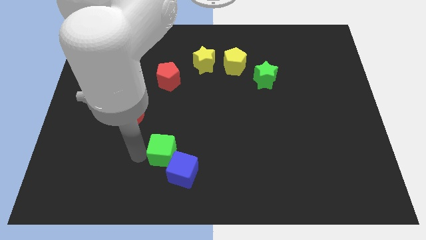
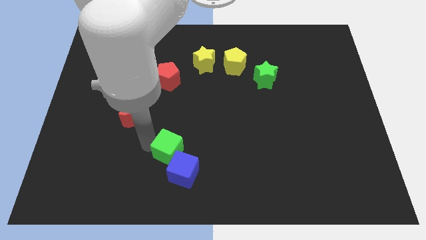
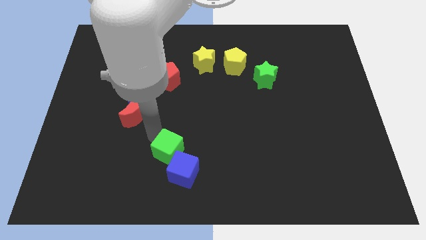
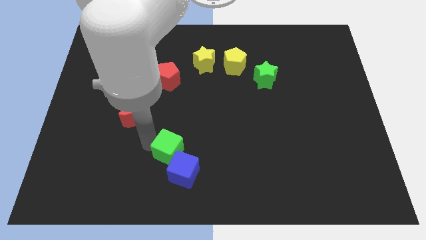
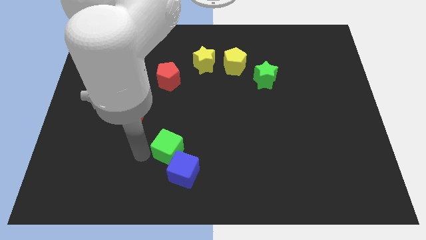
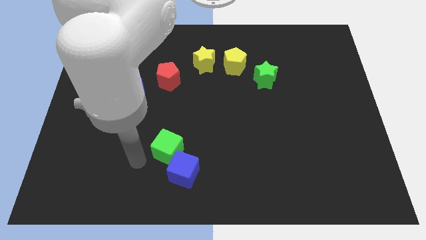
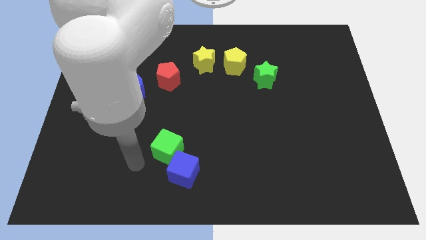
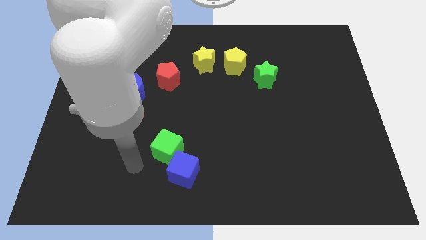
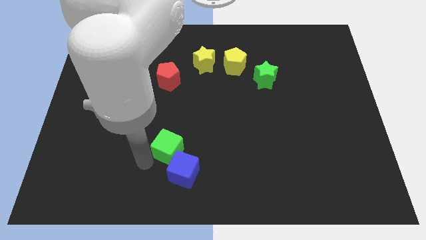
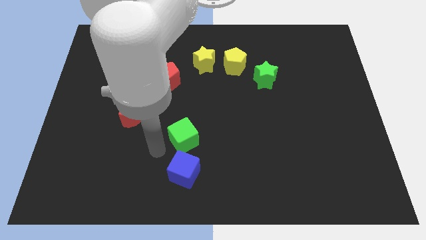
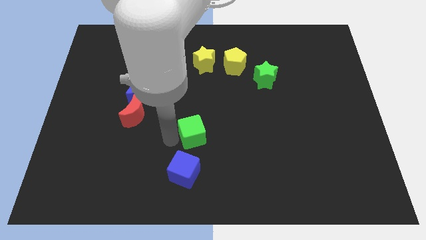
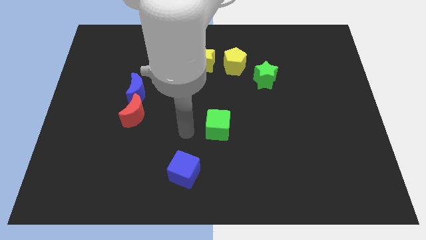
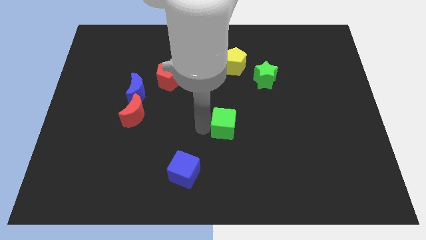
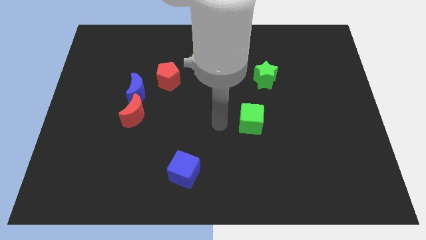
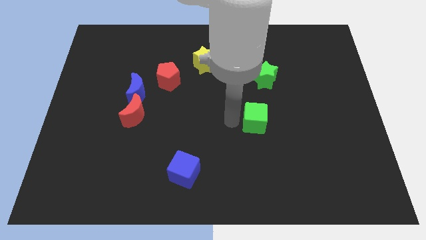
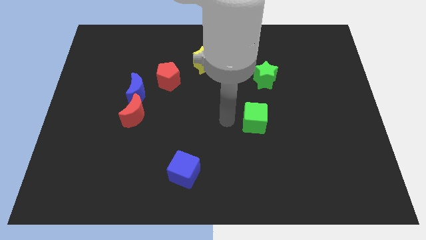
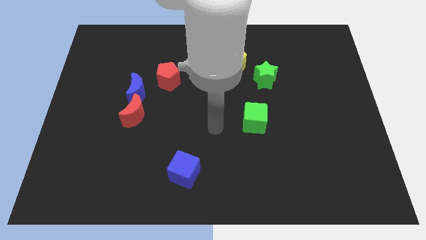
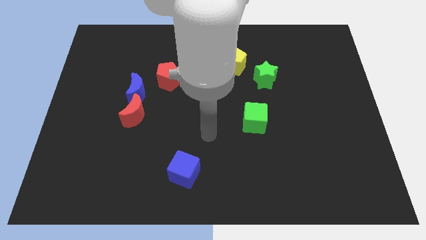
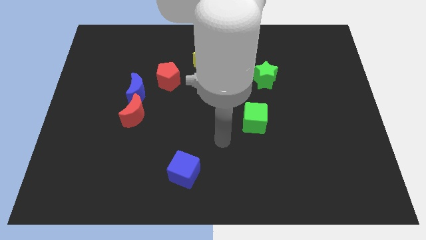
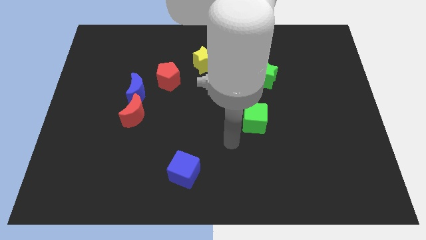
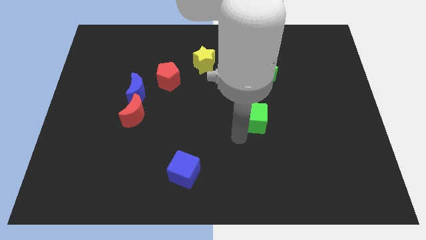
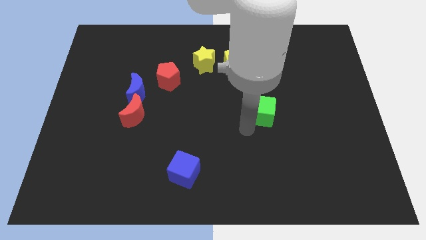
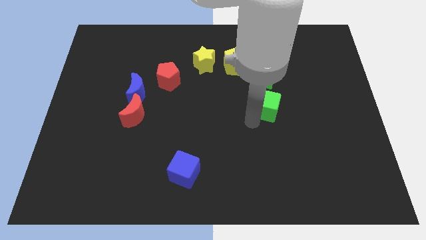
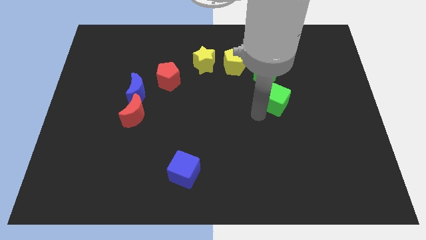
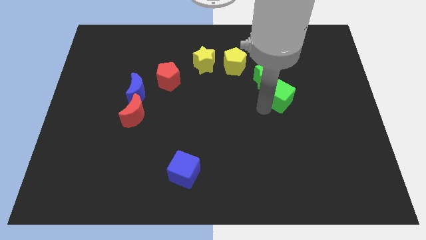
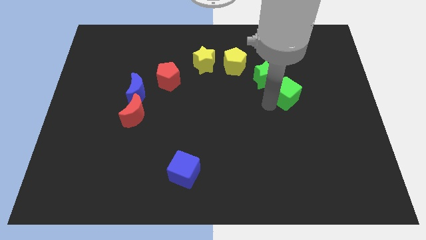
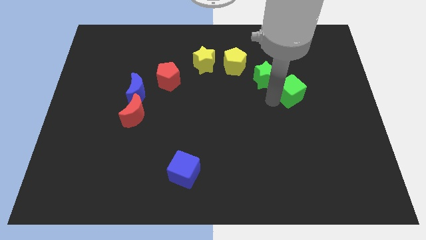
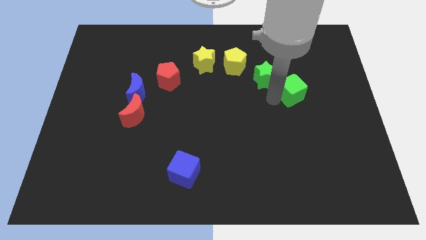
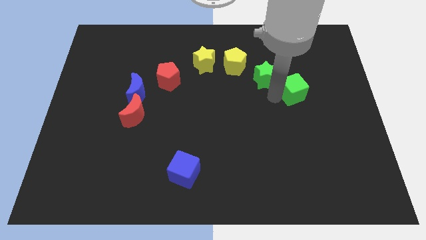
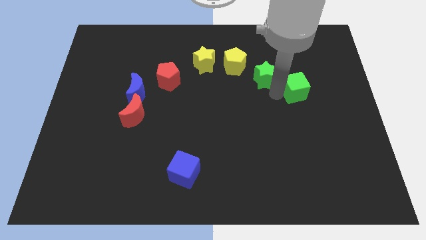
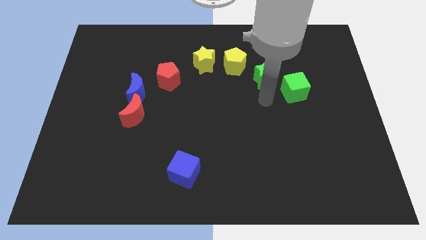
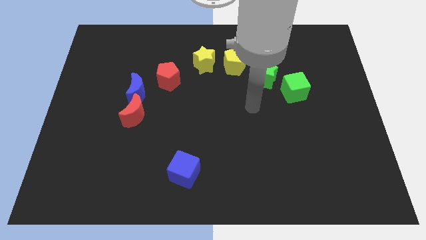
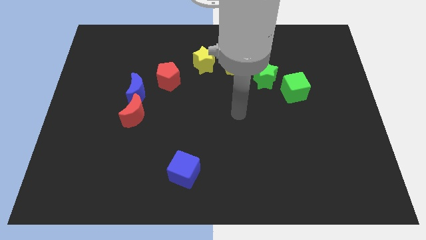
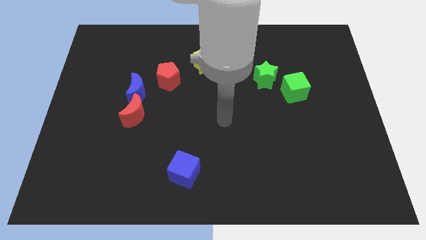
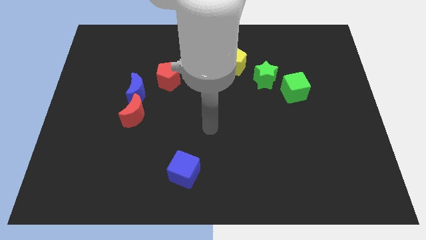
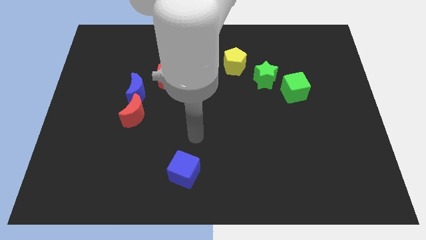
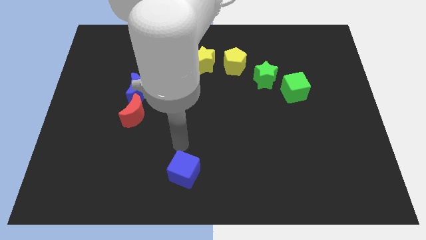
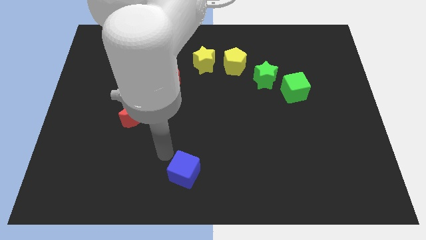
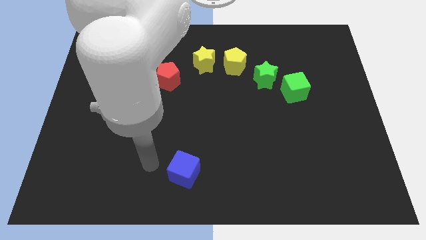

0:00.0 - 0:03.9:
place green block to the right of green star

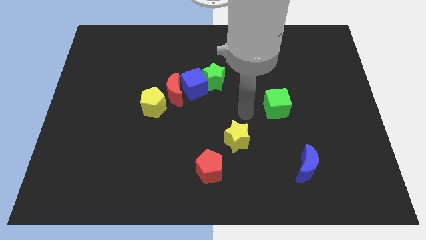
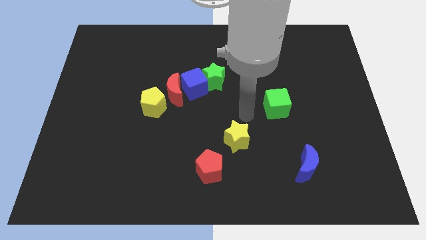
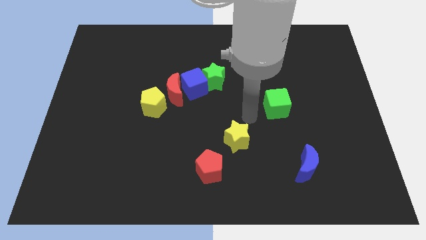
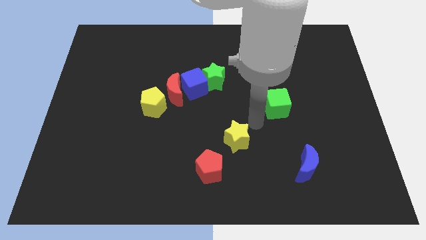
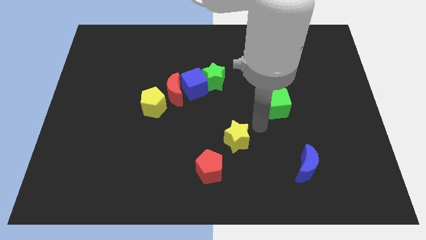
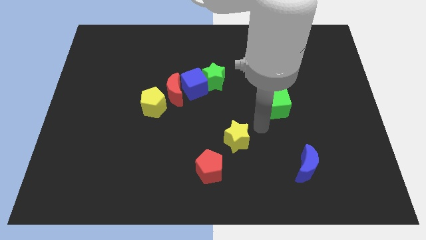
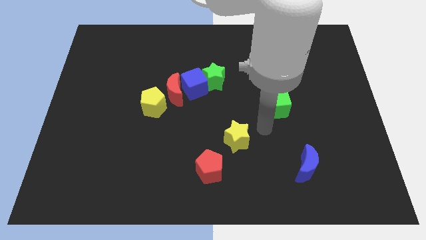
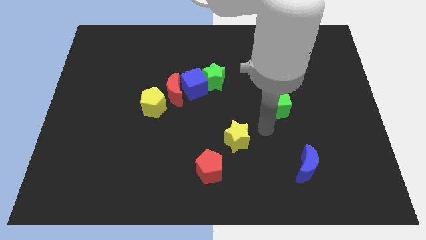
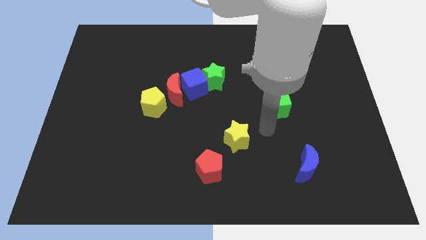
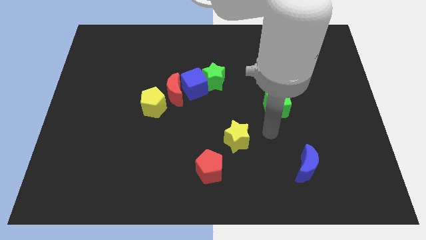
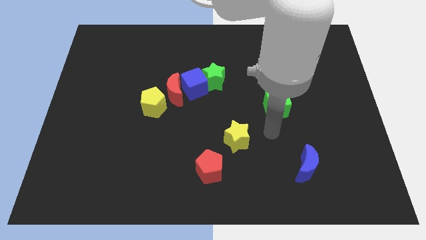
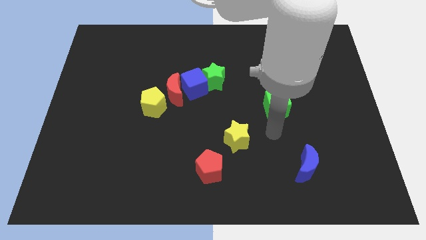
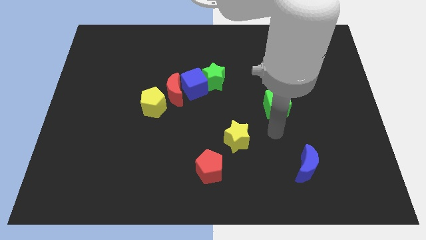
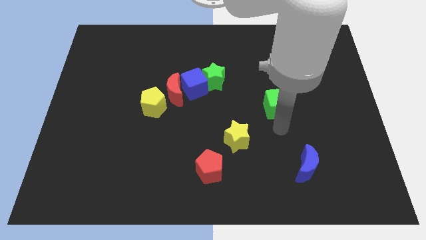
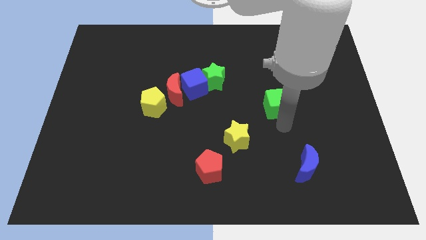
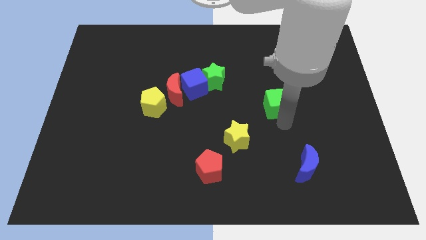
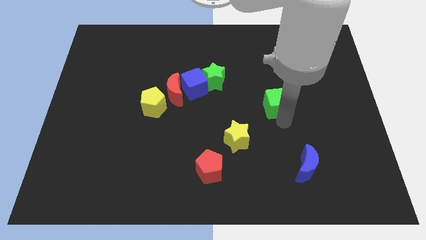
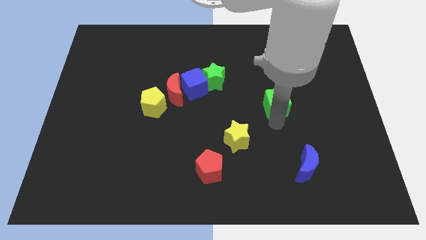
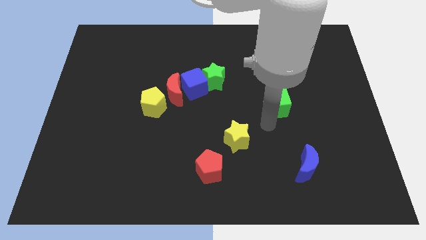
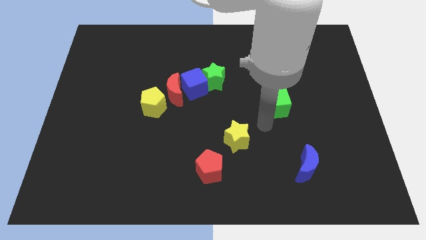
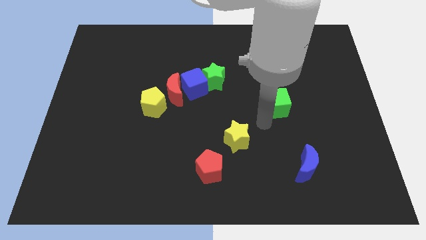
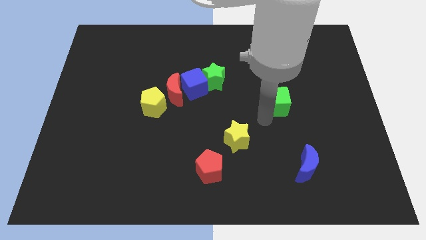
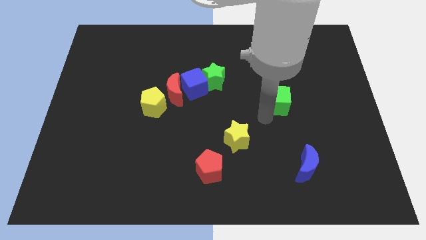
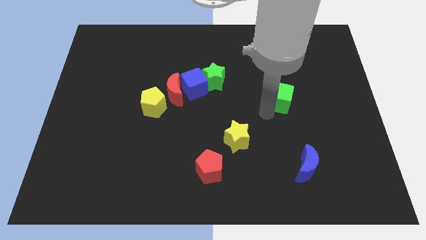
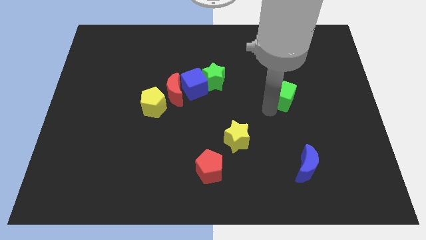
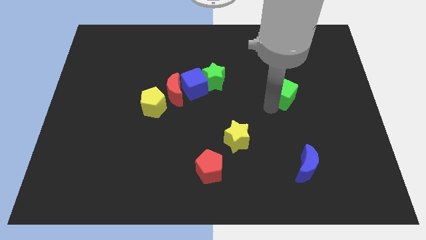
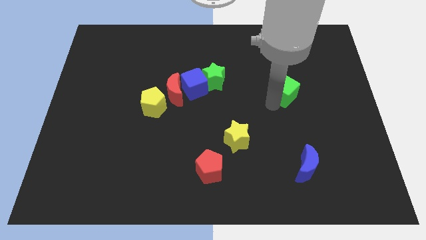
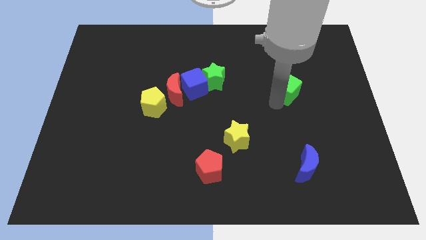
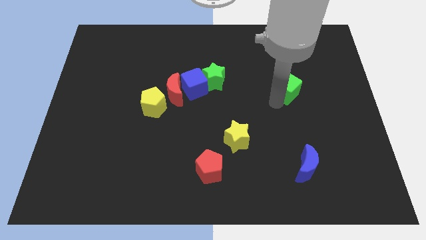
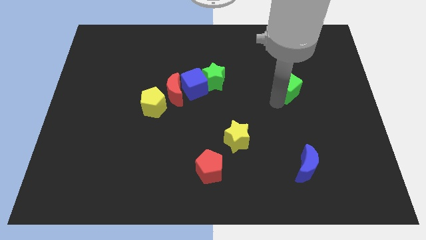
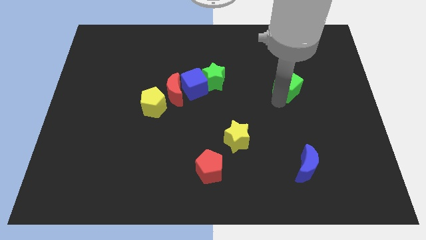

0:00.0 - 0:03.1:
slightly push the green cube towards the right side

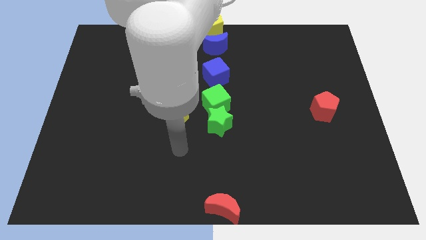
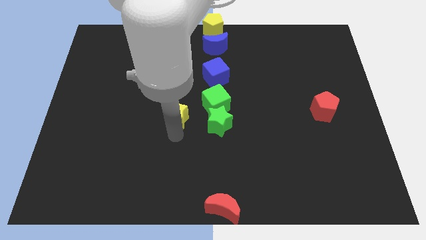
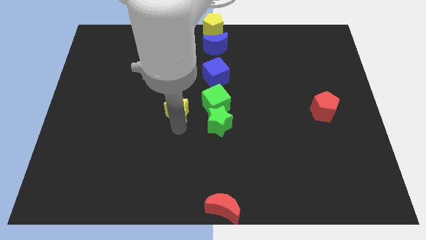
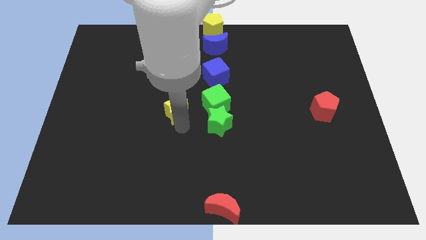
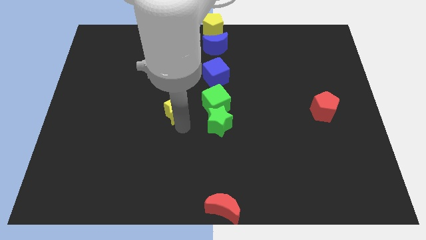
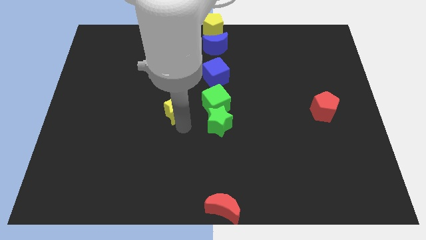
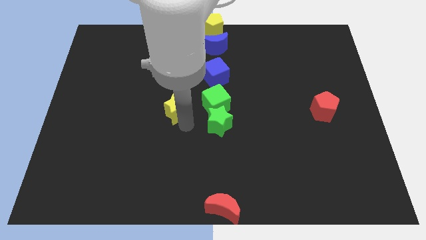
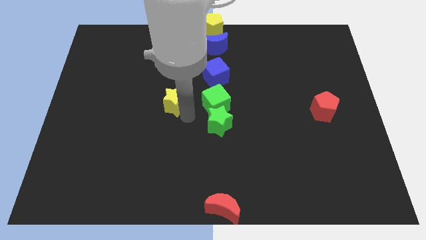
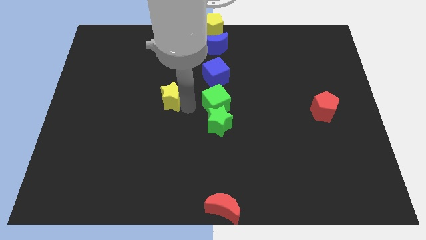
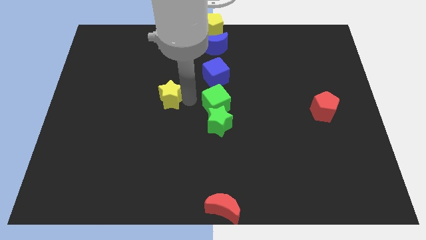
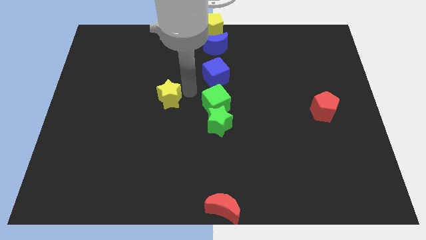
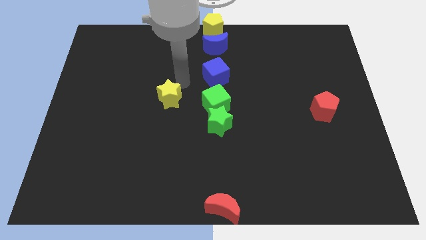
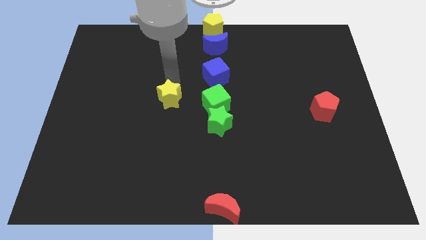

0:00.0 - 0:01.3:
place the yellow star left to the green cube

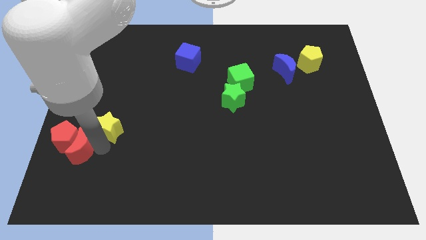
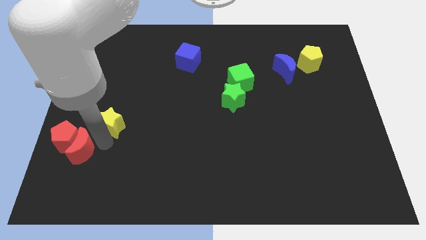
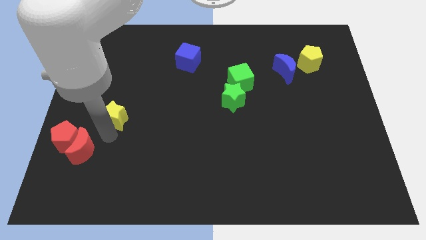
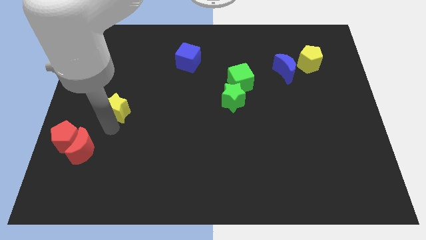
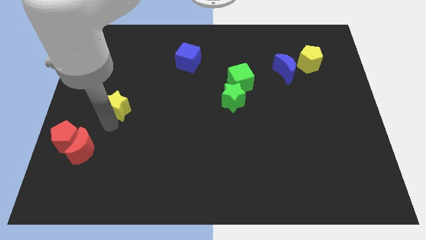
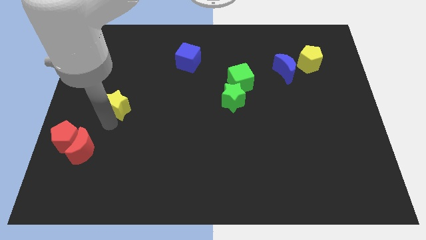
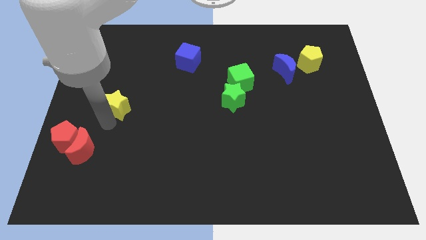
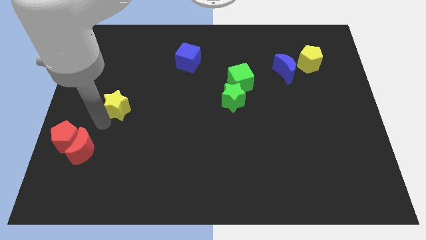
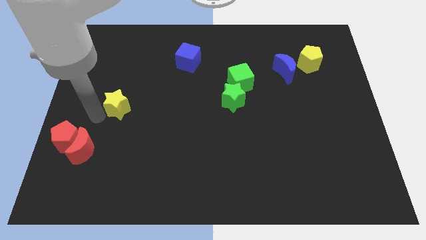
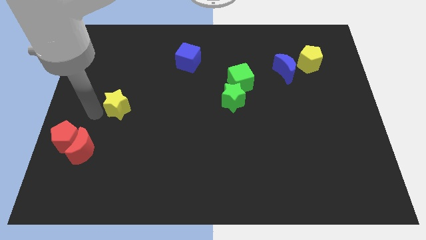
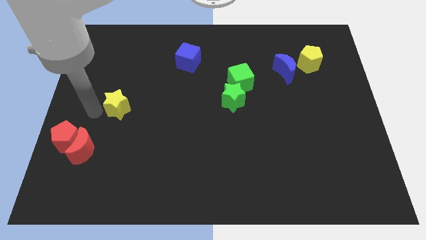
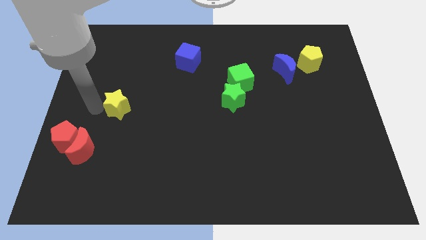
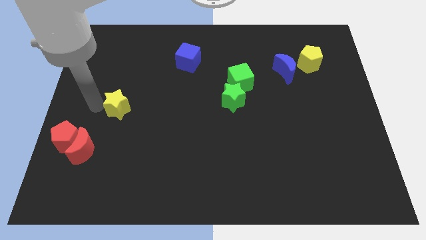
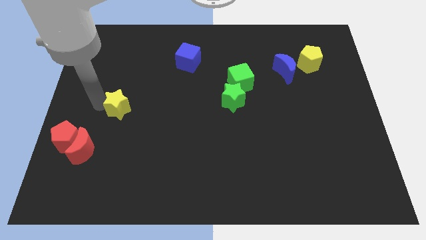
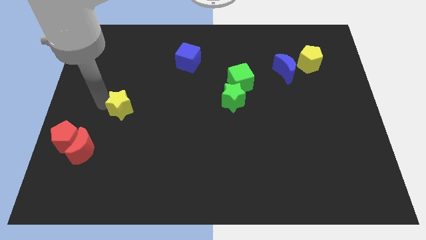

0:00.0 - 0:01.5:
push the yellow star slightly towards top side
